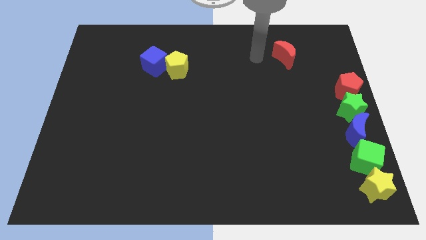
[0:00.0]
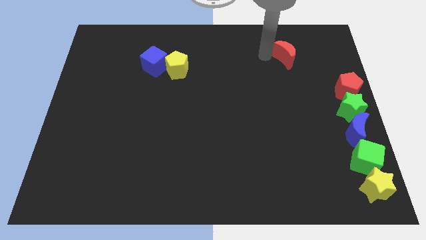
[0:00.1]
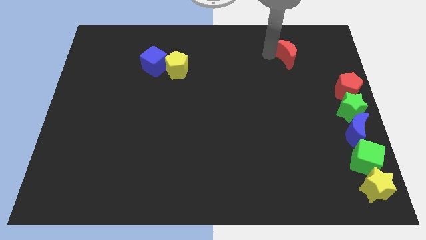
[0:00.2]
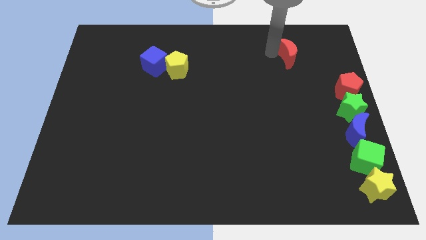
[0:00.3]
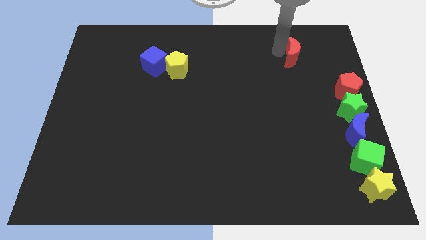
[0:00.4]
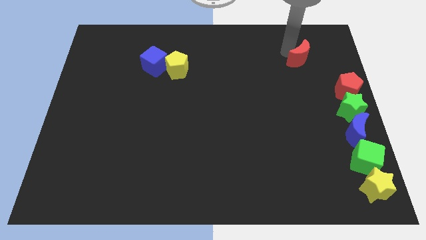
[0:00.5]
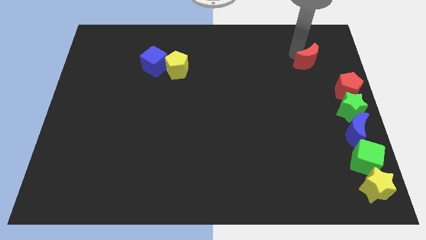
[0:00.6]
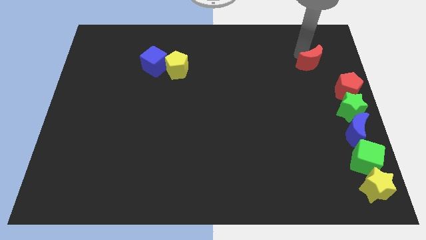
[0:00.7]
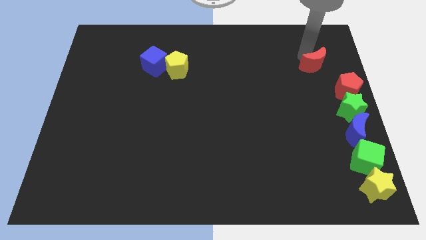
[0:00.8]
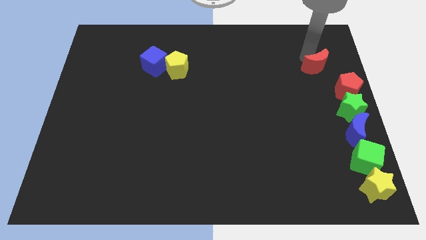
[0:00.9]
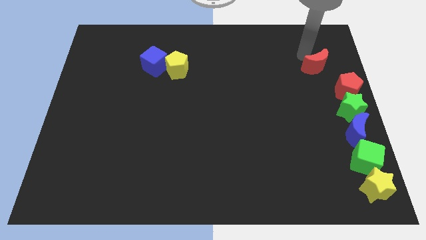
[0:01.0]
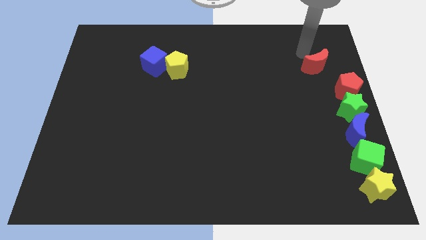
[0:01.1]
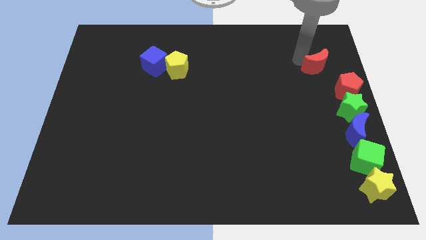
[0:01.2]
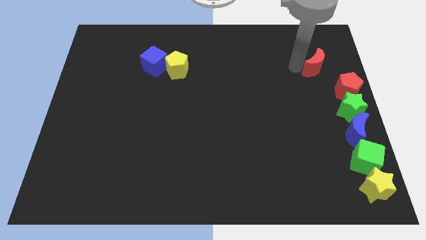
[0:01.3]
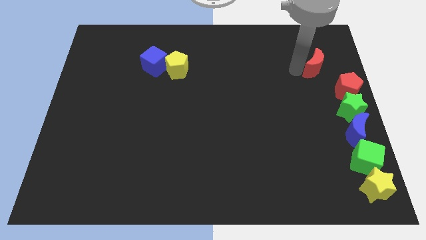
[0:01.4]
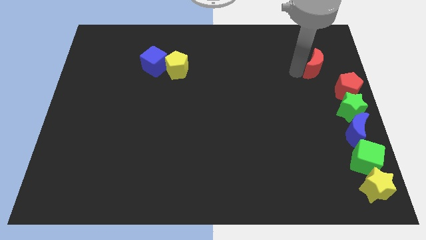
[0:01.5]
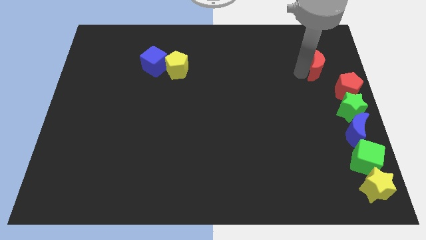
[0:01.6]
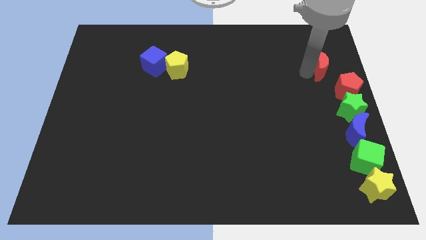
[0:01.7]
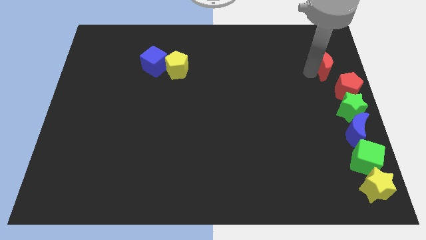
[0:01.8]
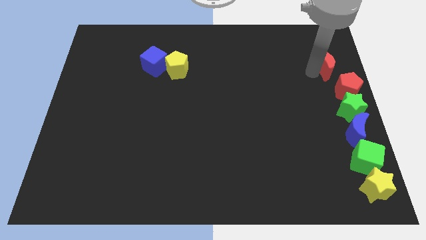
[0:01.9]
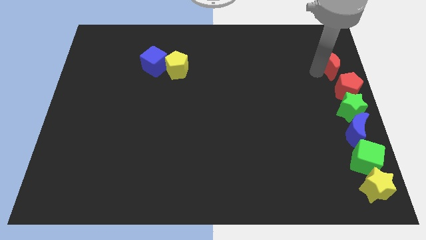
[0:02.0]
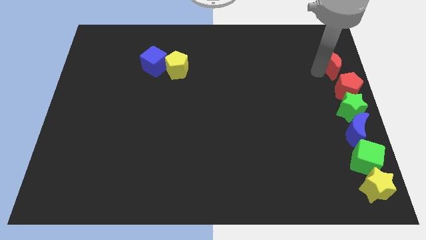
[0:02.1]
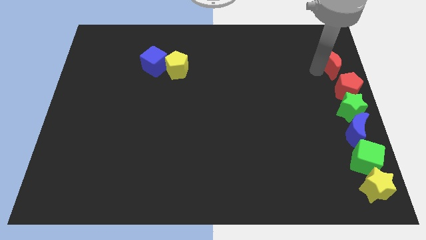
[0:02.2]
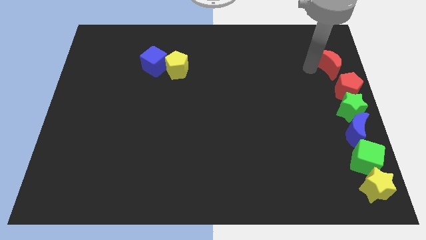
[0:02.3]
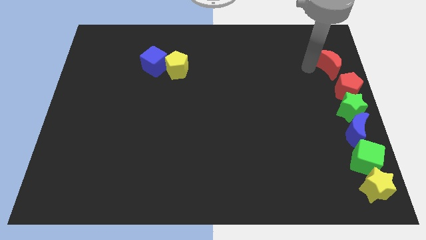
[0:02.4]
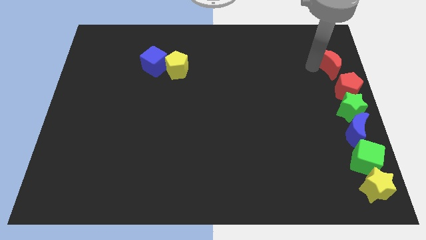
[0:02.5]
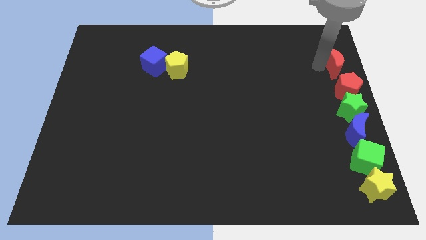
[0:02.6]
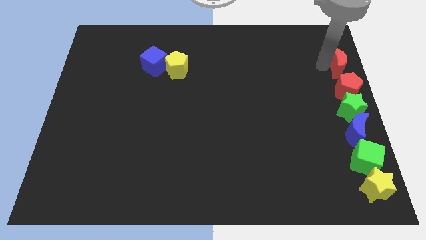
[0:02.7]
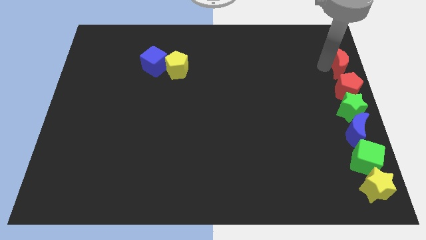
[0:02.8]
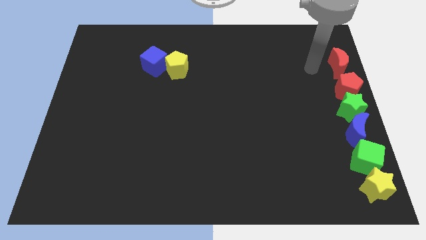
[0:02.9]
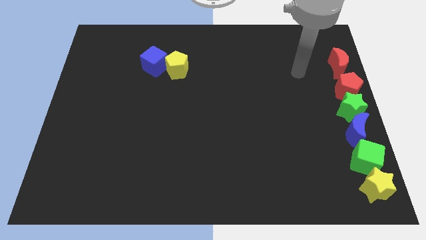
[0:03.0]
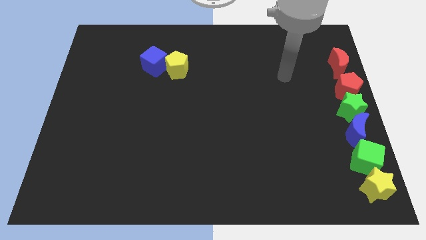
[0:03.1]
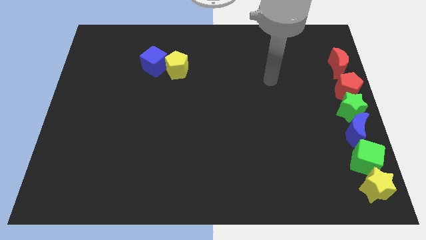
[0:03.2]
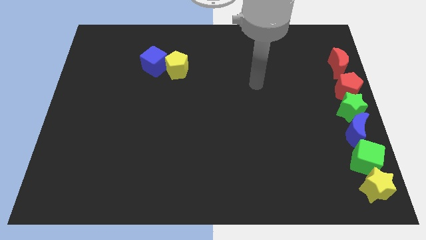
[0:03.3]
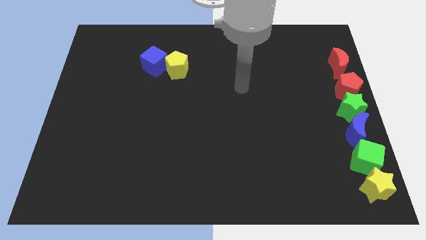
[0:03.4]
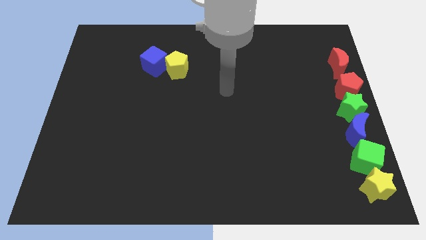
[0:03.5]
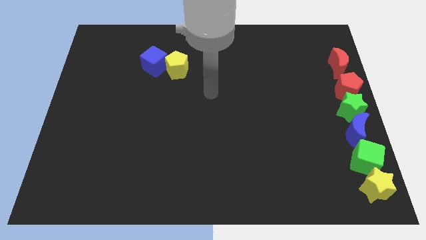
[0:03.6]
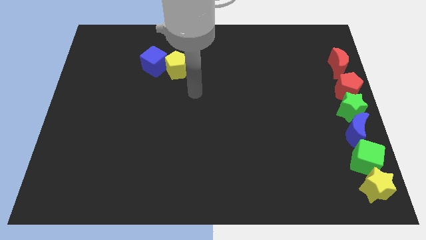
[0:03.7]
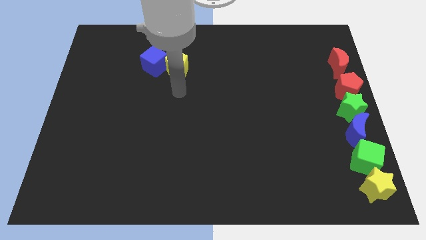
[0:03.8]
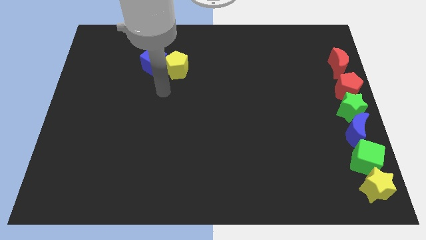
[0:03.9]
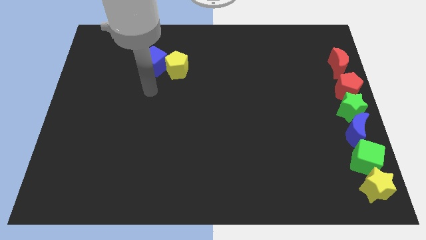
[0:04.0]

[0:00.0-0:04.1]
place red crescent at the top of red pentagon

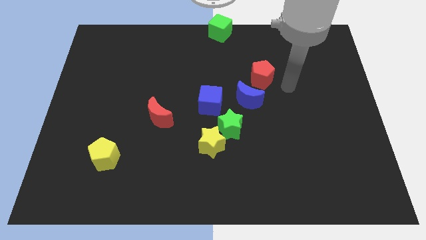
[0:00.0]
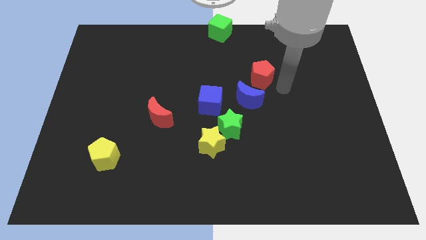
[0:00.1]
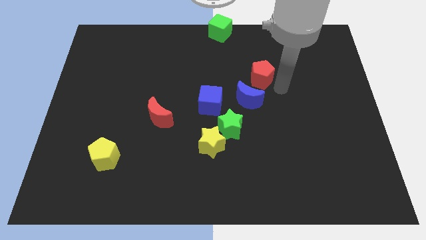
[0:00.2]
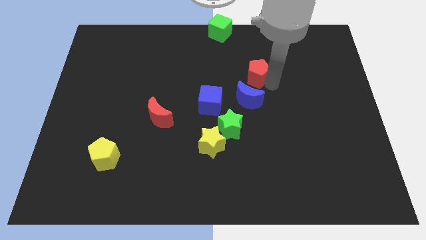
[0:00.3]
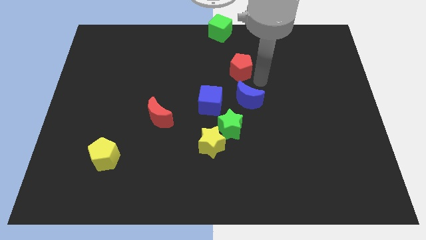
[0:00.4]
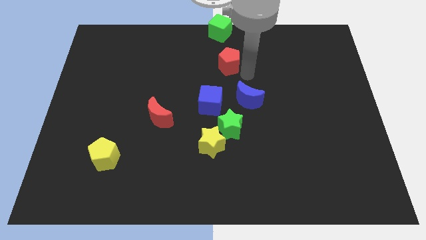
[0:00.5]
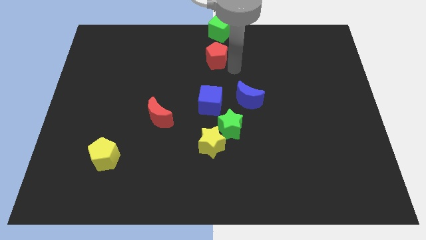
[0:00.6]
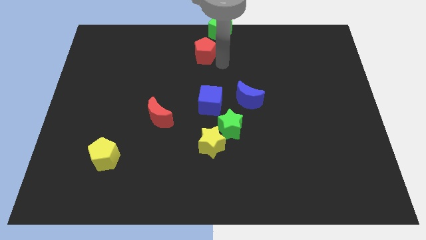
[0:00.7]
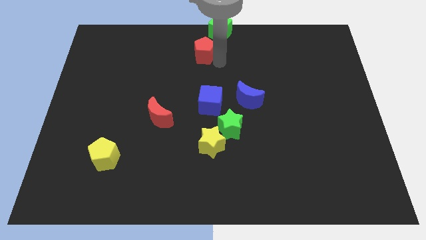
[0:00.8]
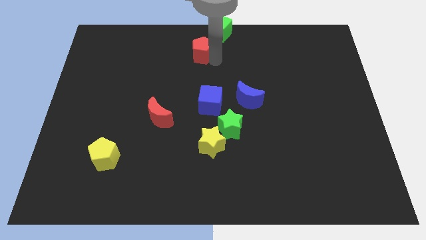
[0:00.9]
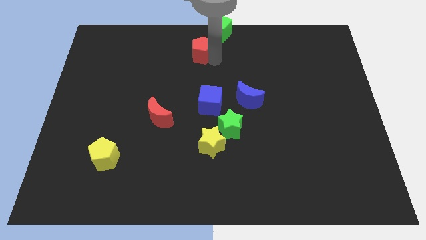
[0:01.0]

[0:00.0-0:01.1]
move the red pentagon away from the blue crescent

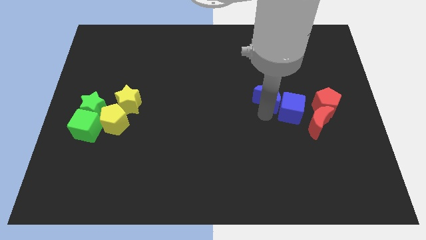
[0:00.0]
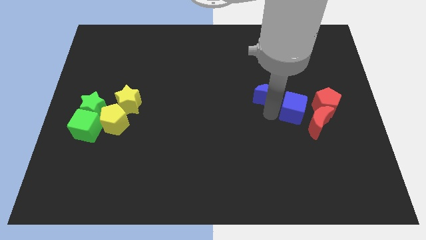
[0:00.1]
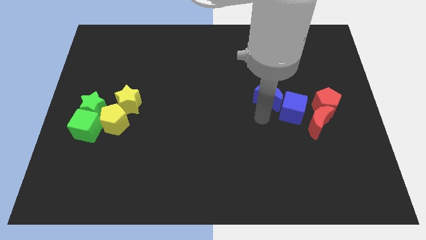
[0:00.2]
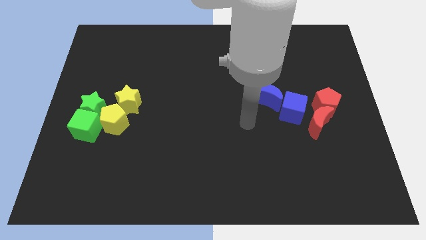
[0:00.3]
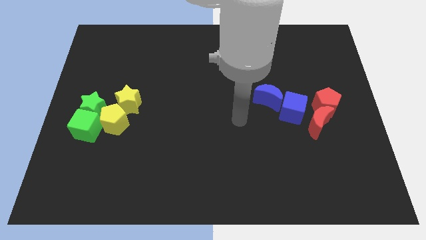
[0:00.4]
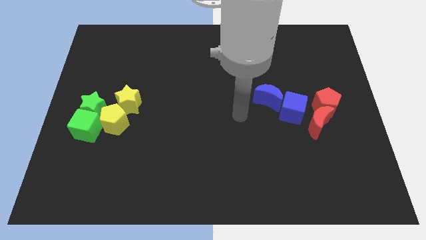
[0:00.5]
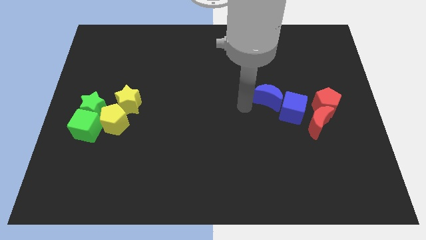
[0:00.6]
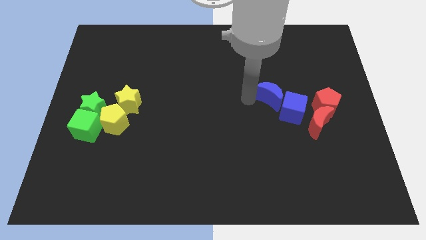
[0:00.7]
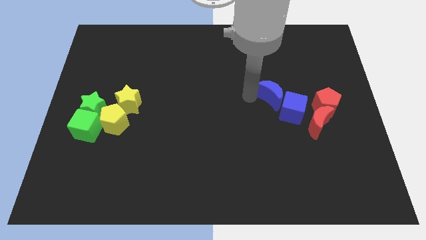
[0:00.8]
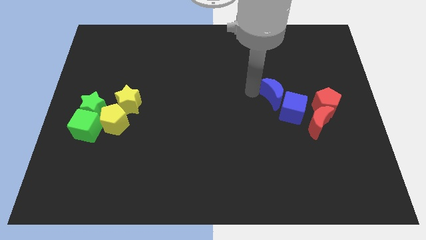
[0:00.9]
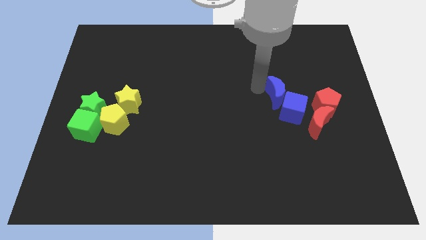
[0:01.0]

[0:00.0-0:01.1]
tap on the top left side of blue moon

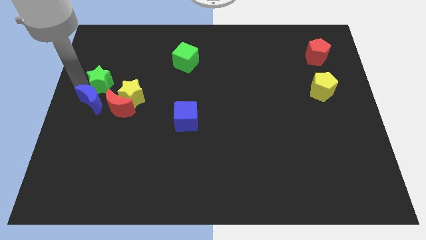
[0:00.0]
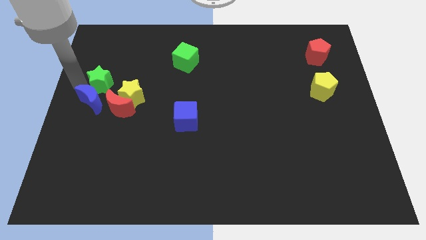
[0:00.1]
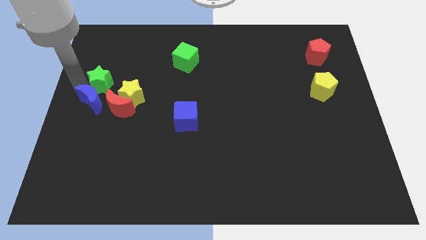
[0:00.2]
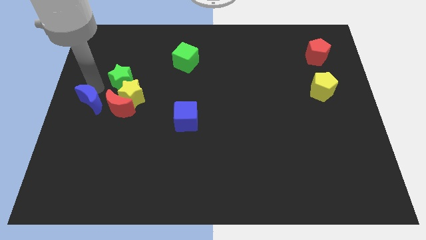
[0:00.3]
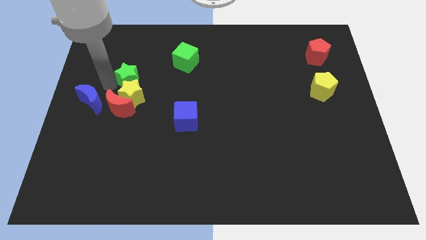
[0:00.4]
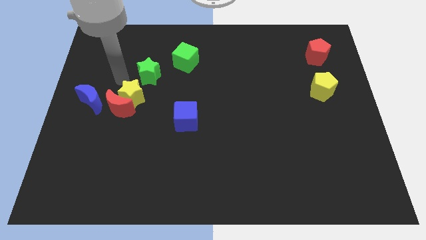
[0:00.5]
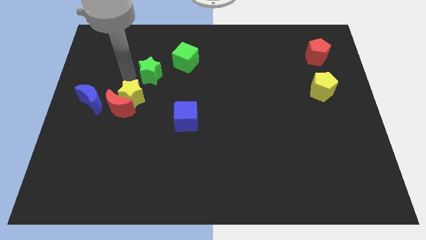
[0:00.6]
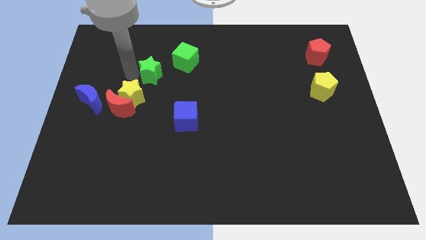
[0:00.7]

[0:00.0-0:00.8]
move the green star towards green cube

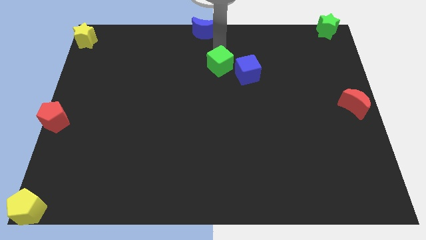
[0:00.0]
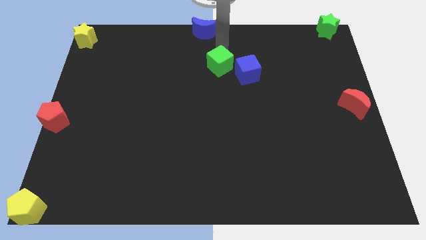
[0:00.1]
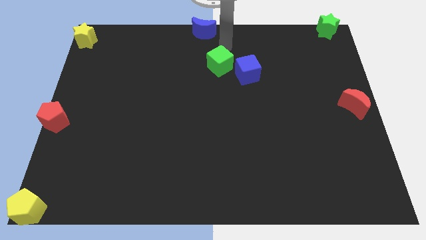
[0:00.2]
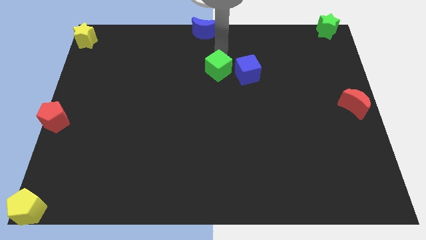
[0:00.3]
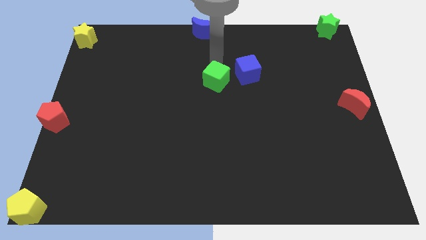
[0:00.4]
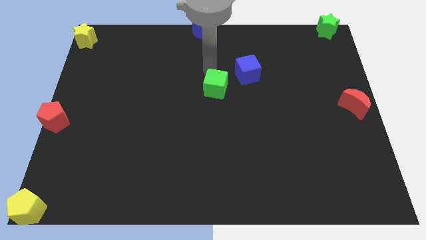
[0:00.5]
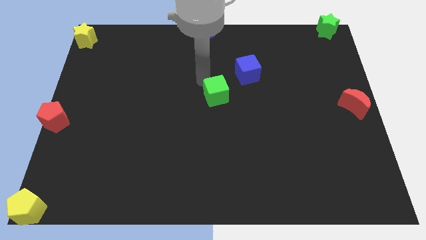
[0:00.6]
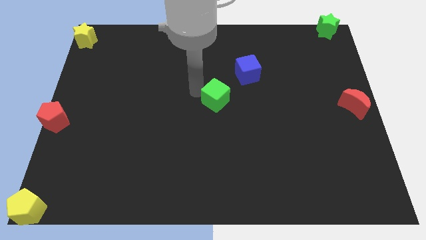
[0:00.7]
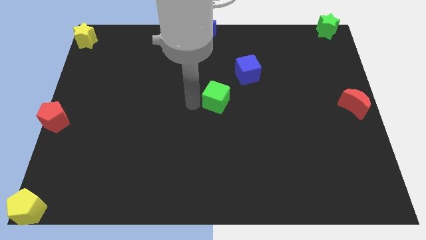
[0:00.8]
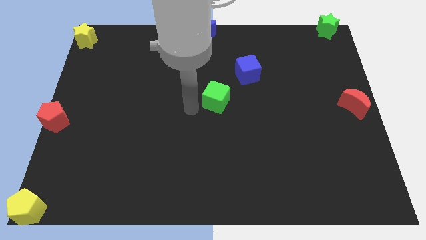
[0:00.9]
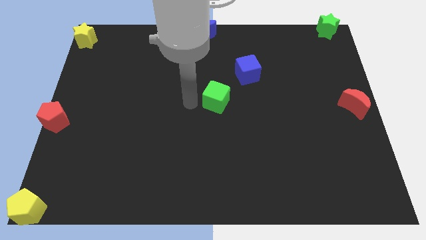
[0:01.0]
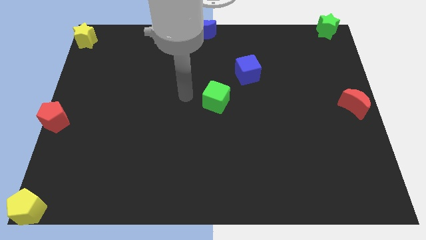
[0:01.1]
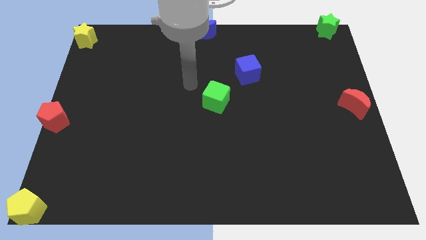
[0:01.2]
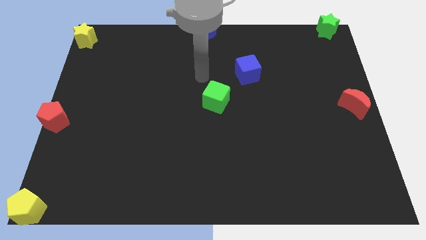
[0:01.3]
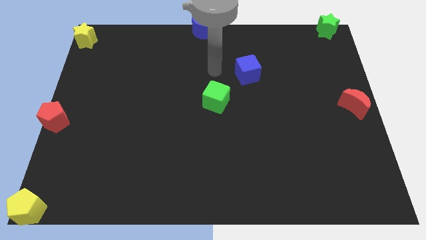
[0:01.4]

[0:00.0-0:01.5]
place the green cube at the center of the board

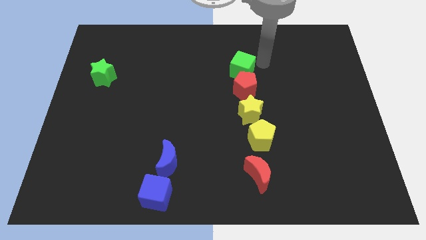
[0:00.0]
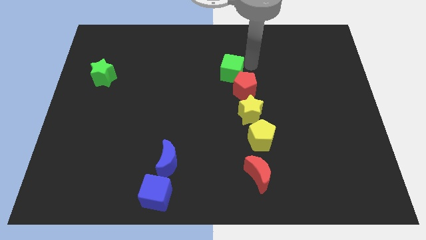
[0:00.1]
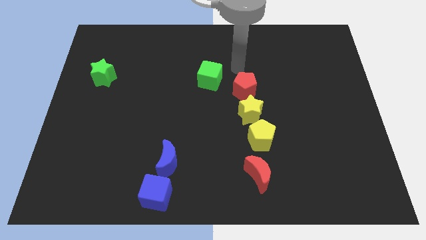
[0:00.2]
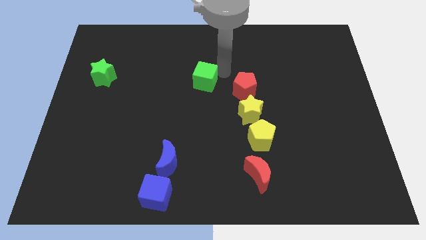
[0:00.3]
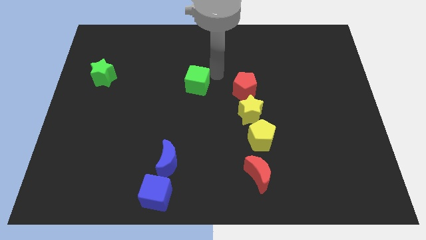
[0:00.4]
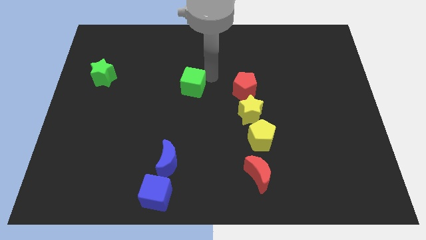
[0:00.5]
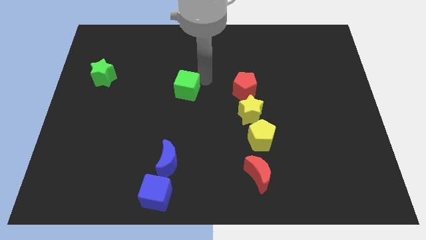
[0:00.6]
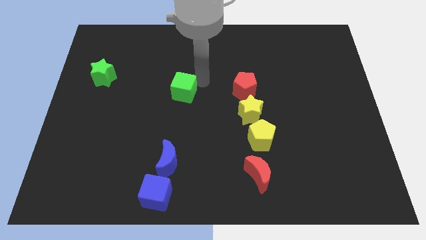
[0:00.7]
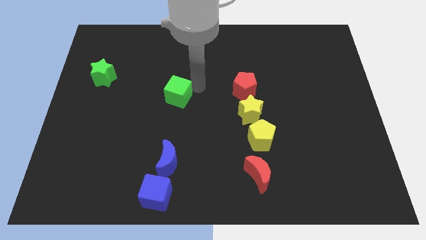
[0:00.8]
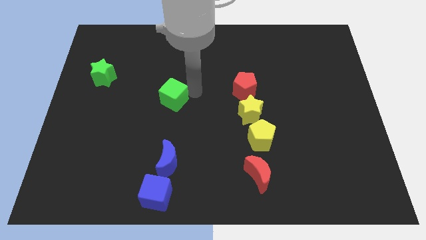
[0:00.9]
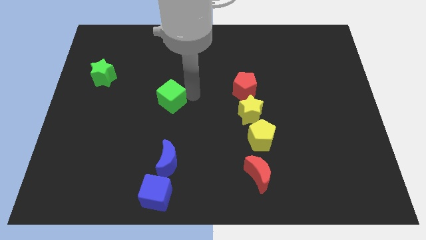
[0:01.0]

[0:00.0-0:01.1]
separate the green cube from the red pentagon
